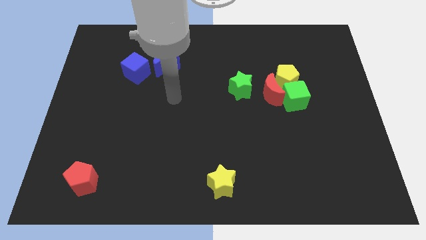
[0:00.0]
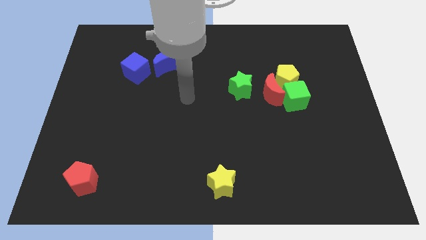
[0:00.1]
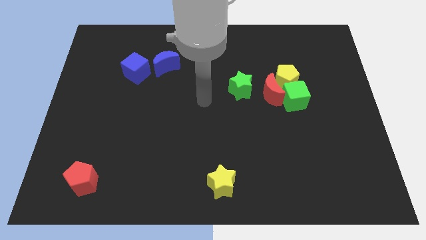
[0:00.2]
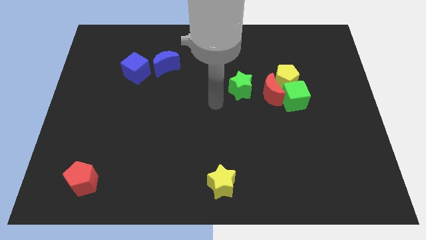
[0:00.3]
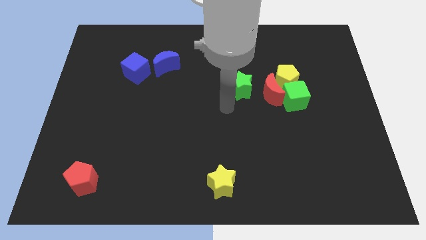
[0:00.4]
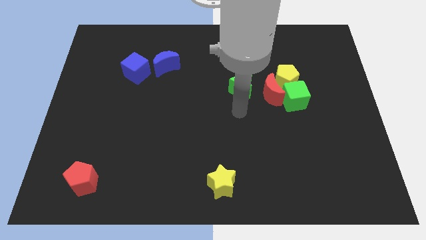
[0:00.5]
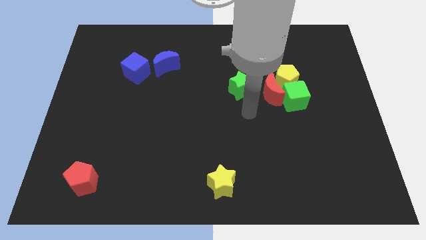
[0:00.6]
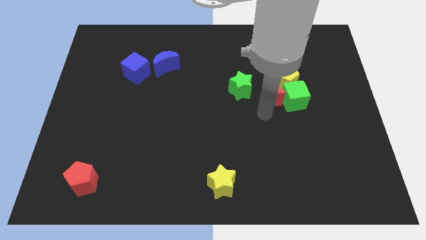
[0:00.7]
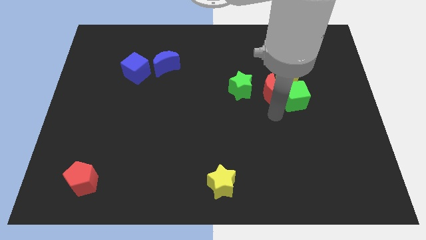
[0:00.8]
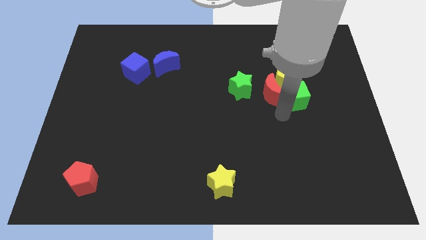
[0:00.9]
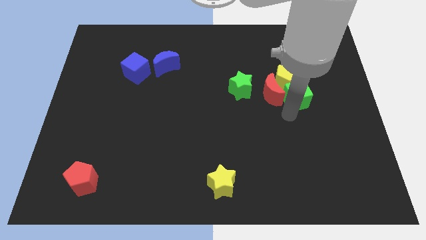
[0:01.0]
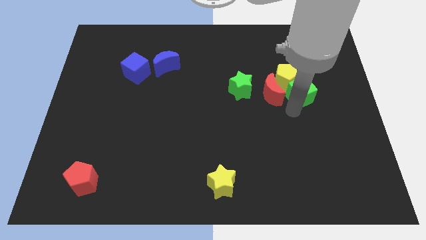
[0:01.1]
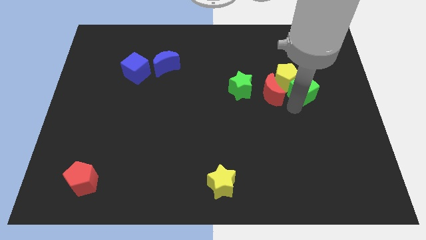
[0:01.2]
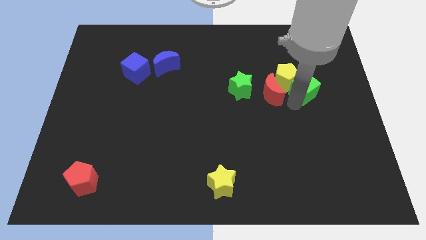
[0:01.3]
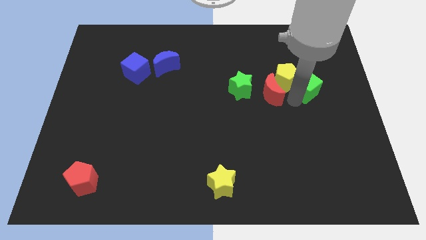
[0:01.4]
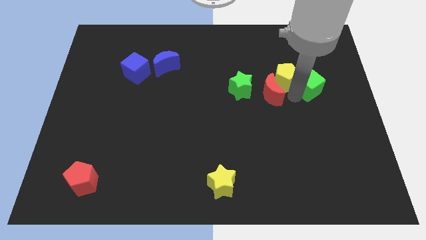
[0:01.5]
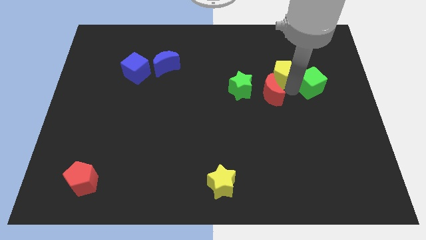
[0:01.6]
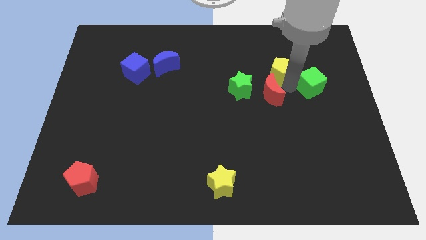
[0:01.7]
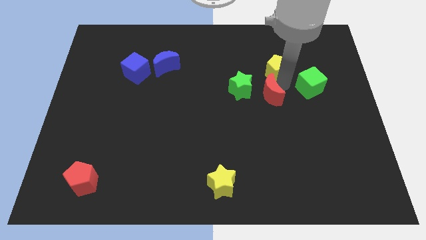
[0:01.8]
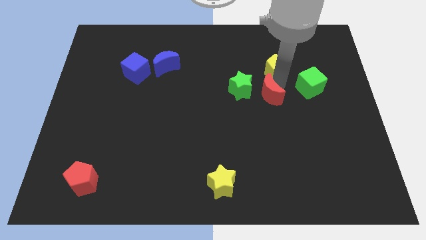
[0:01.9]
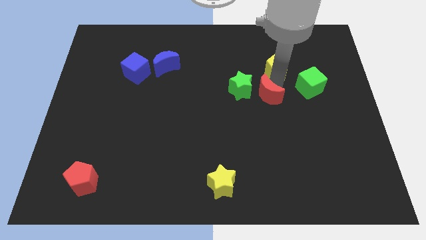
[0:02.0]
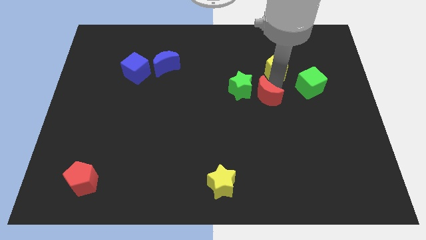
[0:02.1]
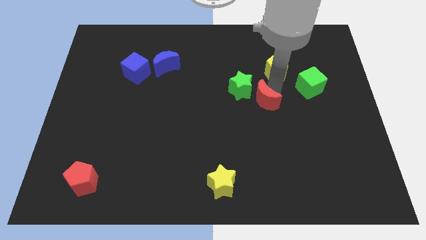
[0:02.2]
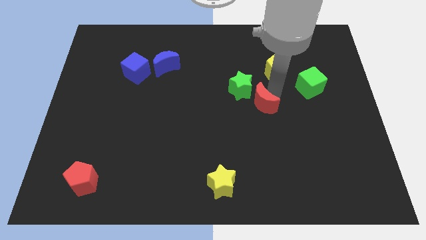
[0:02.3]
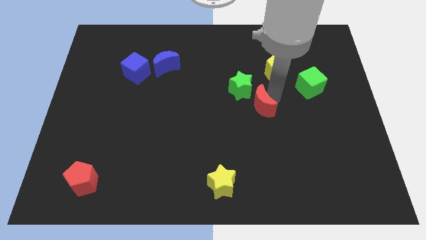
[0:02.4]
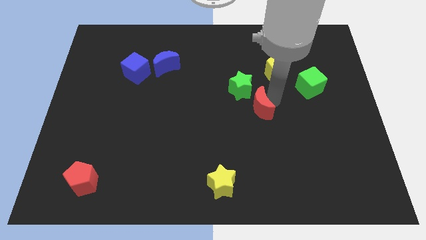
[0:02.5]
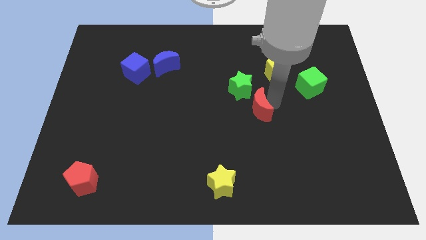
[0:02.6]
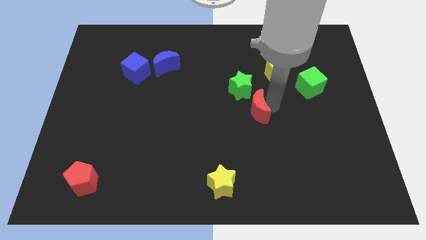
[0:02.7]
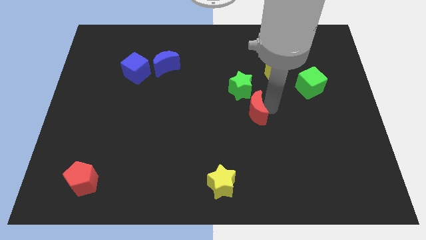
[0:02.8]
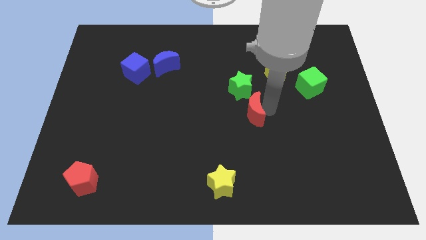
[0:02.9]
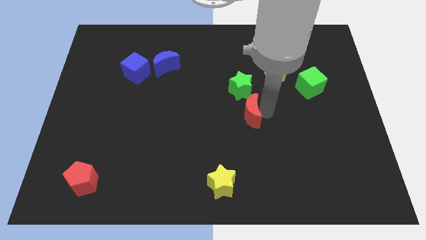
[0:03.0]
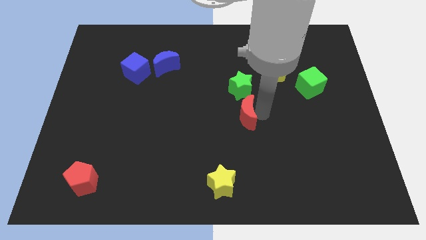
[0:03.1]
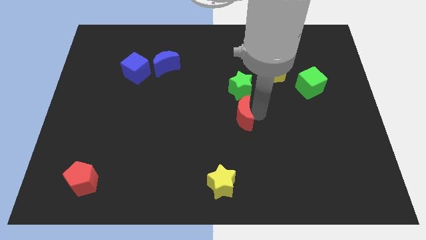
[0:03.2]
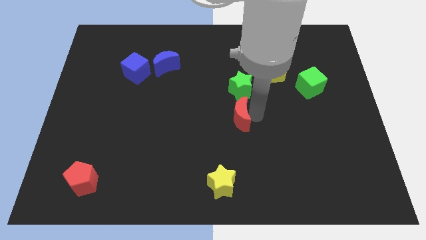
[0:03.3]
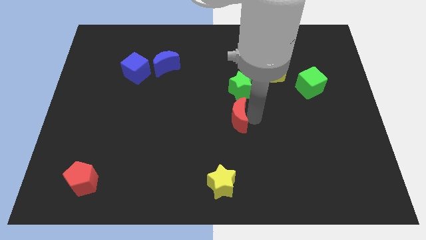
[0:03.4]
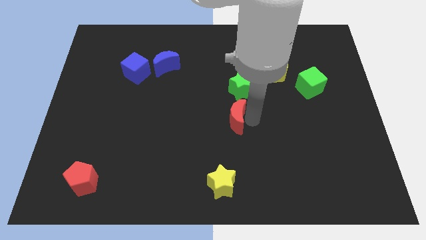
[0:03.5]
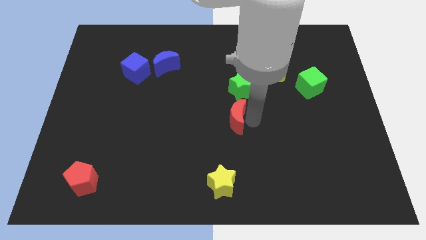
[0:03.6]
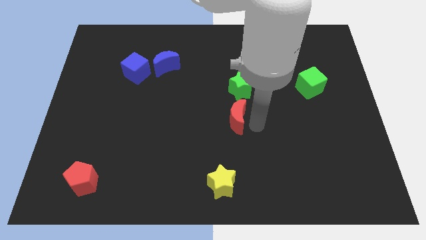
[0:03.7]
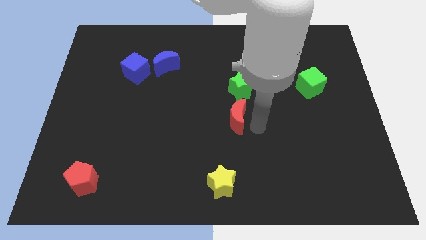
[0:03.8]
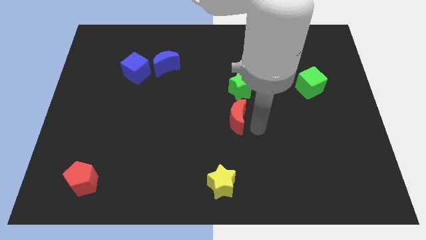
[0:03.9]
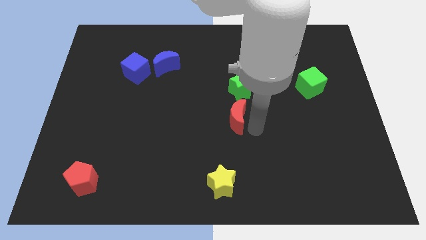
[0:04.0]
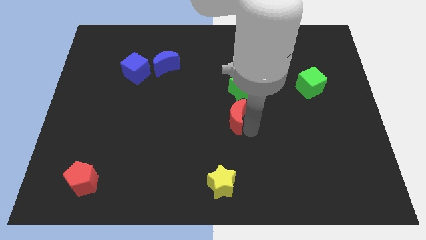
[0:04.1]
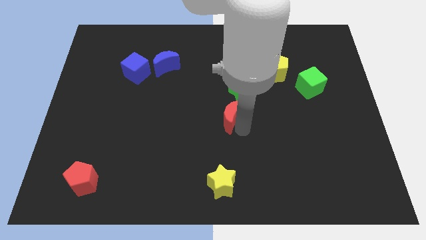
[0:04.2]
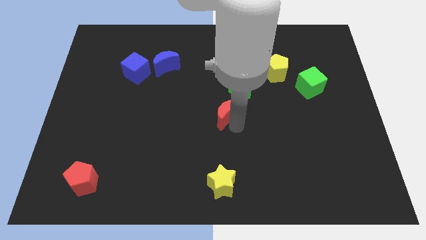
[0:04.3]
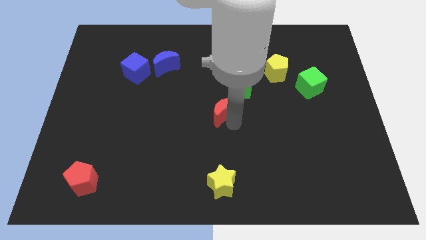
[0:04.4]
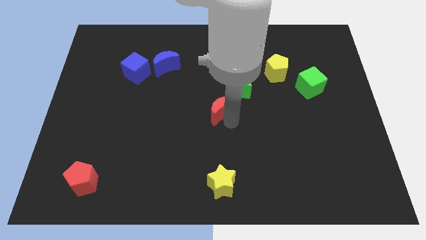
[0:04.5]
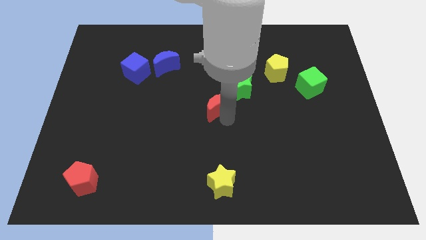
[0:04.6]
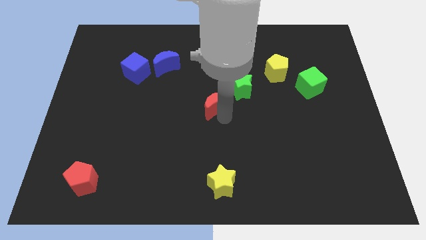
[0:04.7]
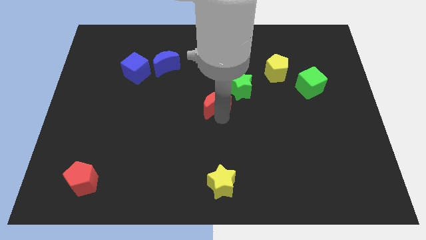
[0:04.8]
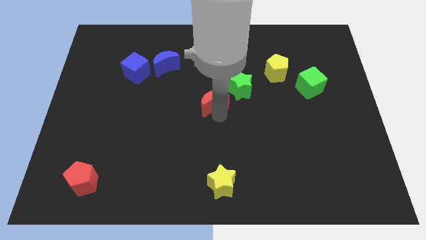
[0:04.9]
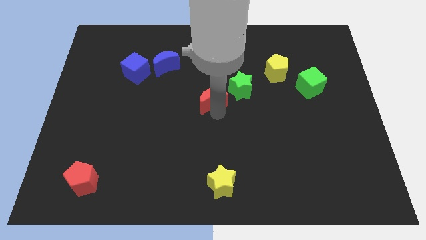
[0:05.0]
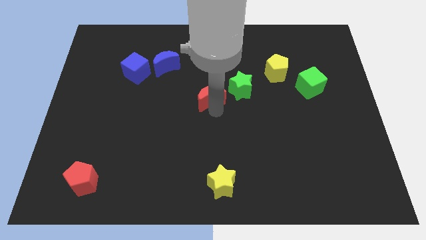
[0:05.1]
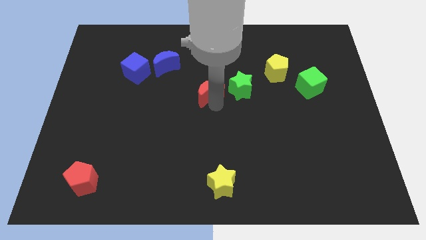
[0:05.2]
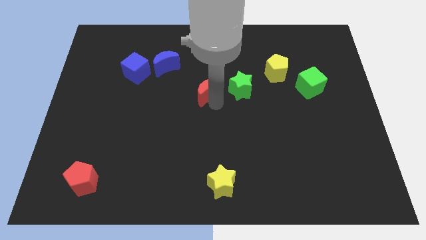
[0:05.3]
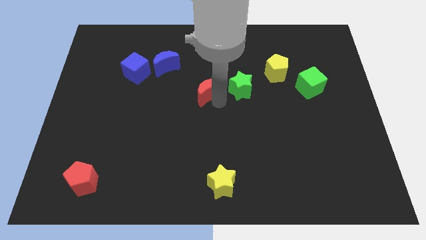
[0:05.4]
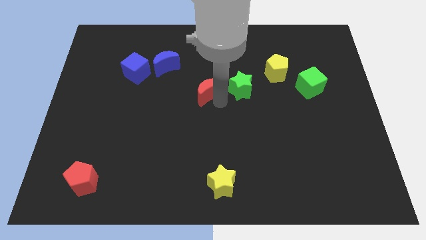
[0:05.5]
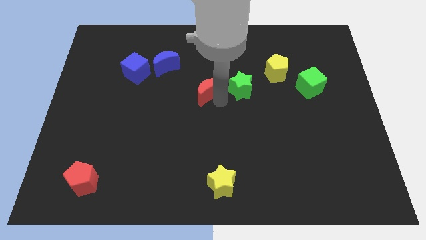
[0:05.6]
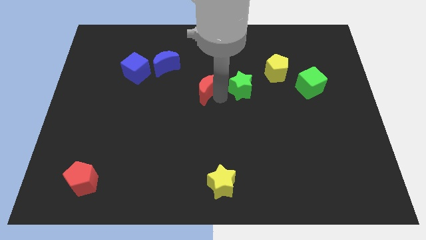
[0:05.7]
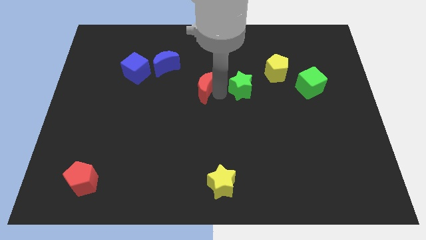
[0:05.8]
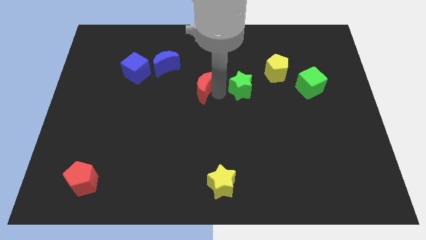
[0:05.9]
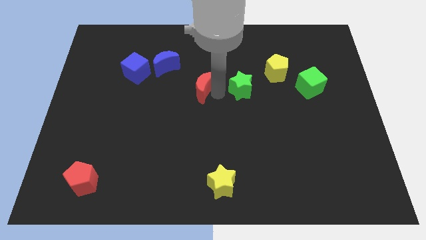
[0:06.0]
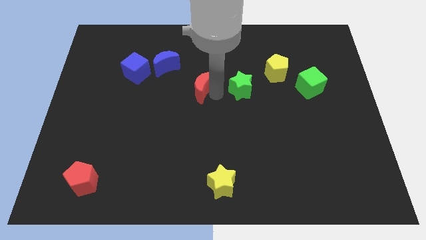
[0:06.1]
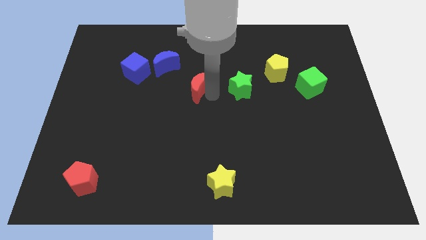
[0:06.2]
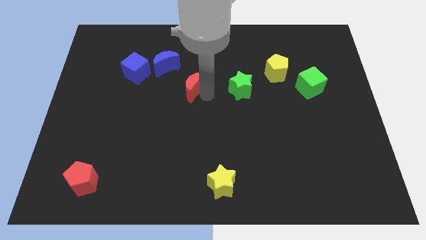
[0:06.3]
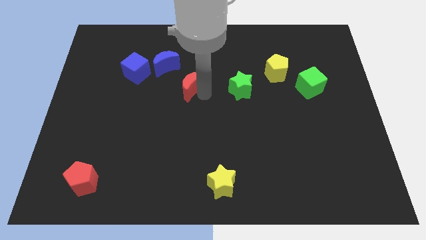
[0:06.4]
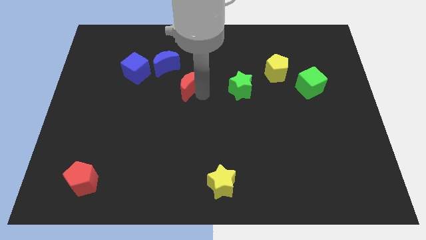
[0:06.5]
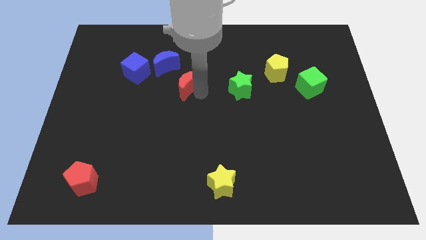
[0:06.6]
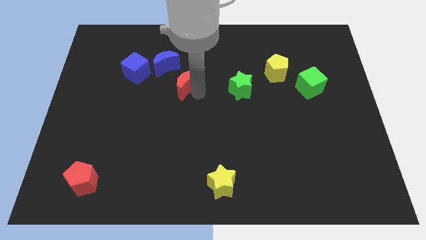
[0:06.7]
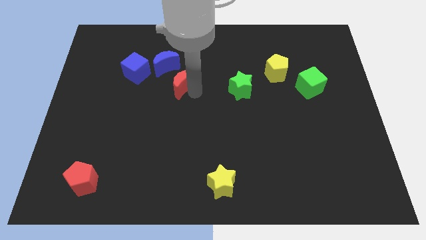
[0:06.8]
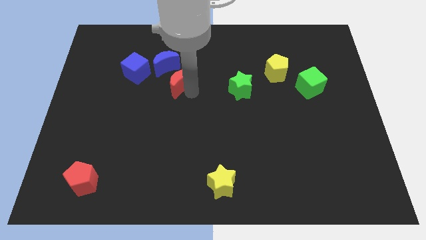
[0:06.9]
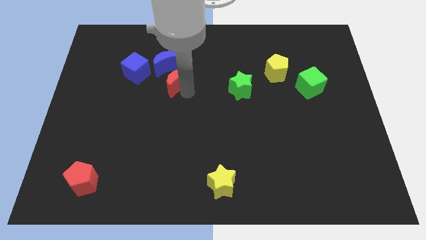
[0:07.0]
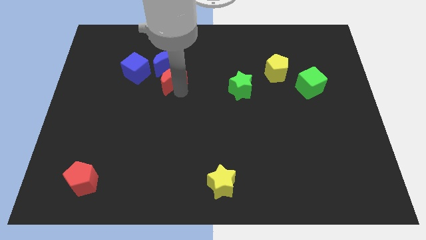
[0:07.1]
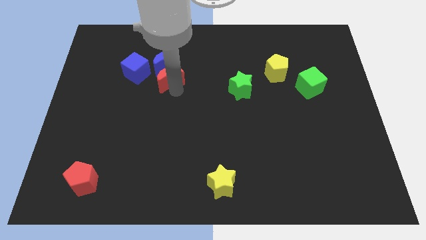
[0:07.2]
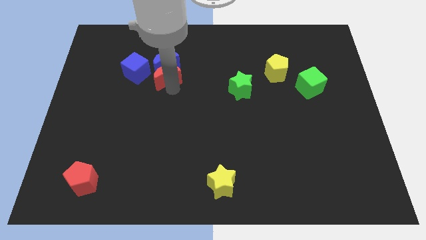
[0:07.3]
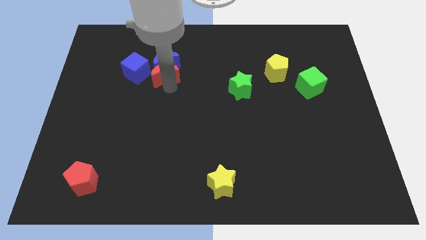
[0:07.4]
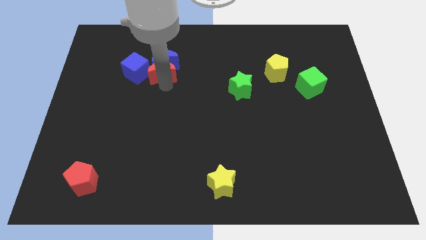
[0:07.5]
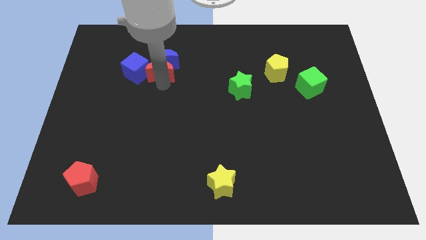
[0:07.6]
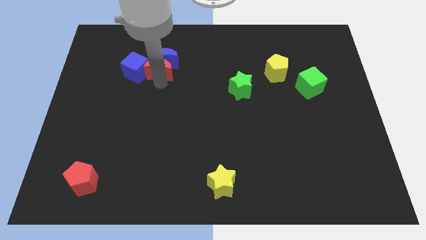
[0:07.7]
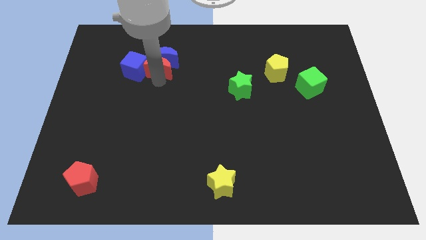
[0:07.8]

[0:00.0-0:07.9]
slide the red moon towards the blue cube
